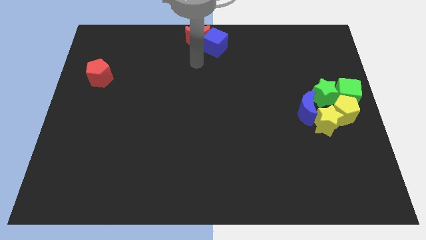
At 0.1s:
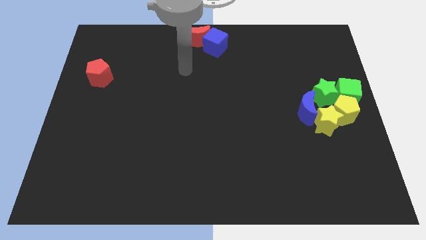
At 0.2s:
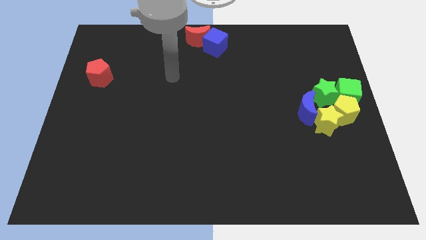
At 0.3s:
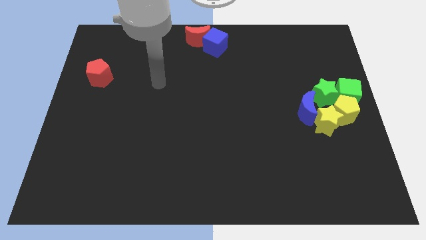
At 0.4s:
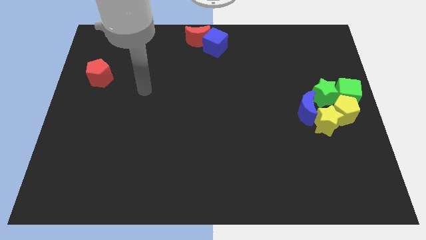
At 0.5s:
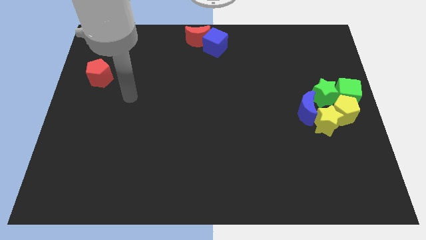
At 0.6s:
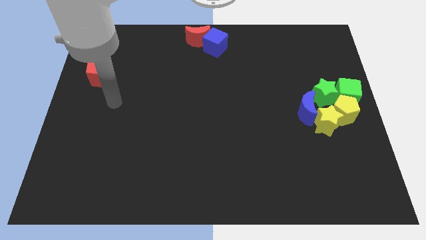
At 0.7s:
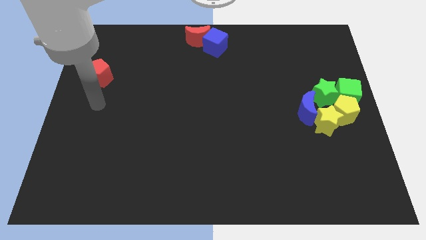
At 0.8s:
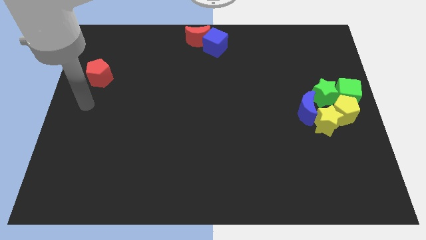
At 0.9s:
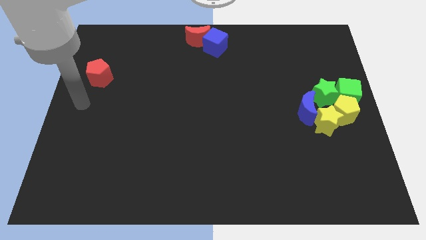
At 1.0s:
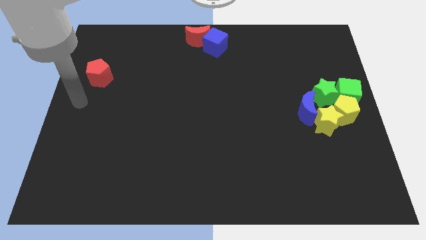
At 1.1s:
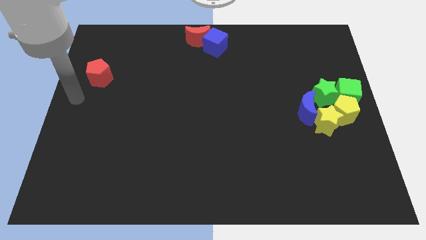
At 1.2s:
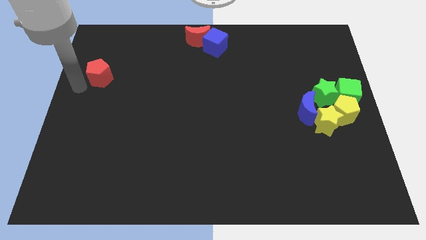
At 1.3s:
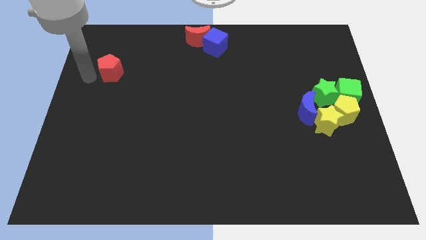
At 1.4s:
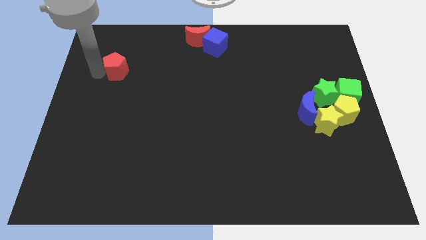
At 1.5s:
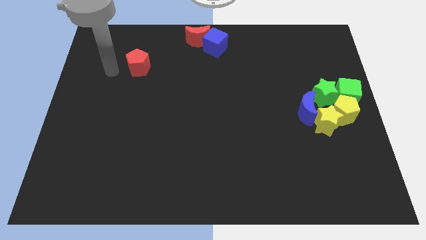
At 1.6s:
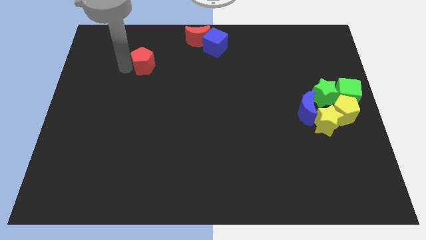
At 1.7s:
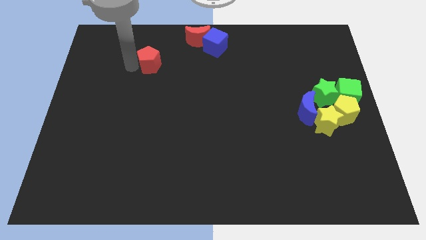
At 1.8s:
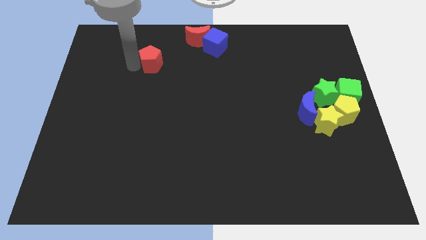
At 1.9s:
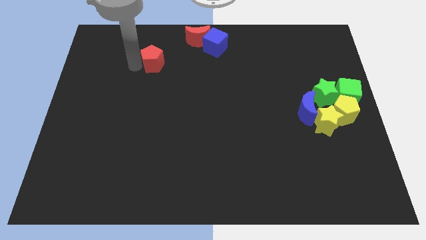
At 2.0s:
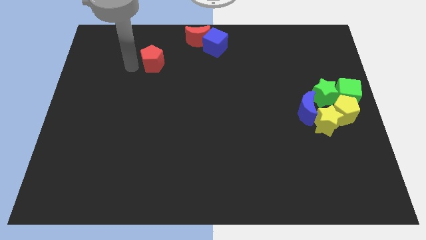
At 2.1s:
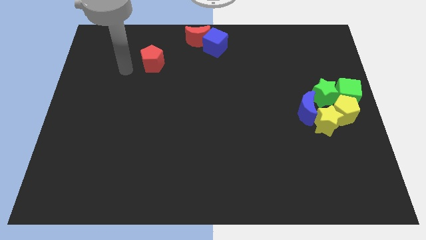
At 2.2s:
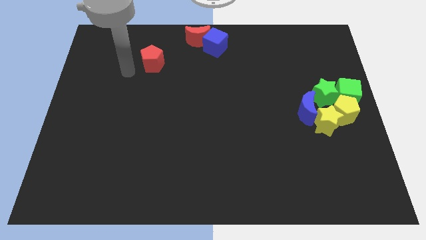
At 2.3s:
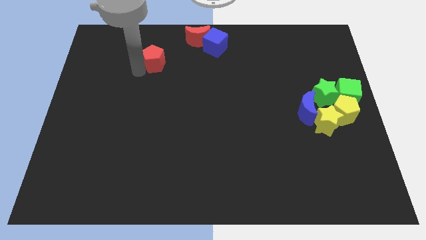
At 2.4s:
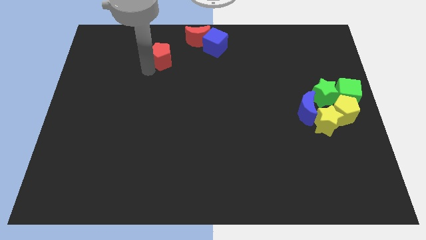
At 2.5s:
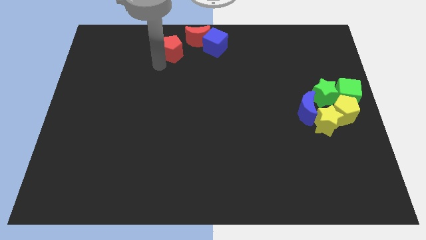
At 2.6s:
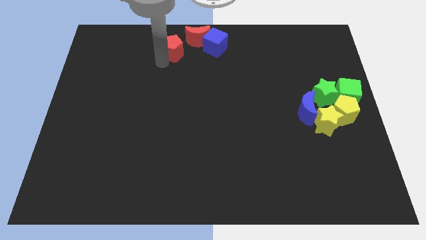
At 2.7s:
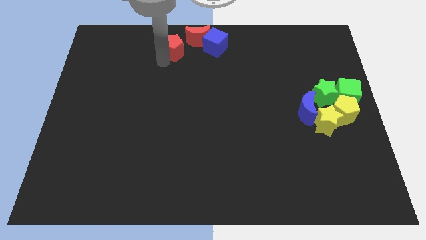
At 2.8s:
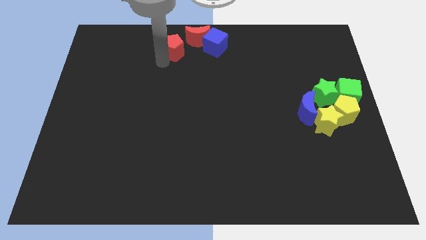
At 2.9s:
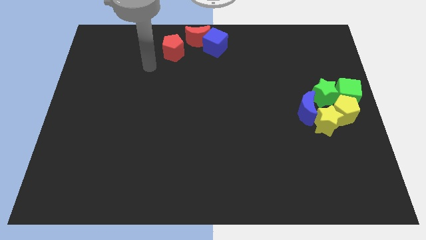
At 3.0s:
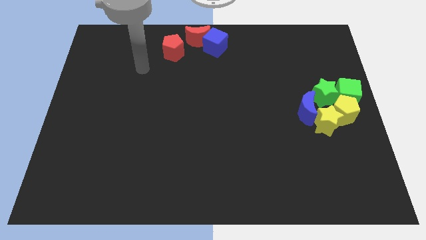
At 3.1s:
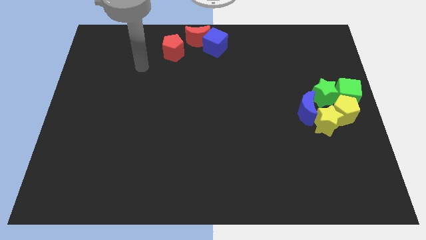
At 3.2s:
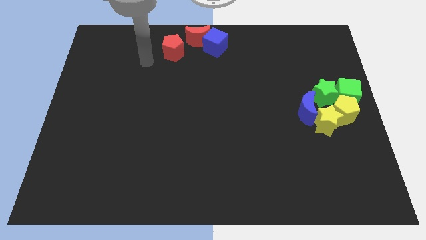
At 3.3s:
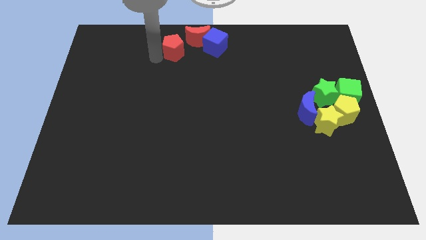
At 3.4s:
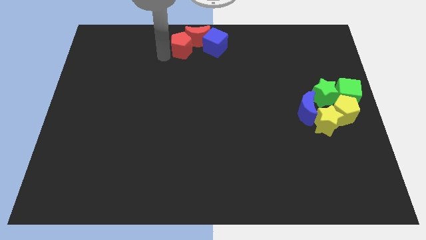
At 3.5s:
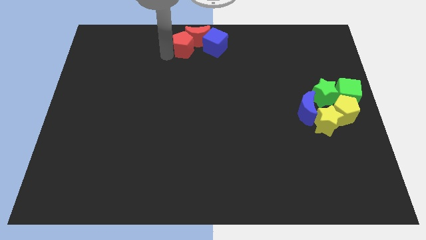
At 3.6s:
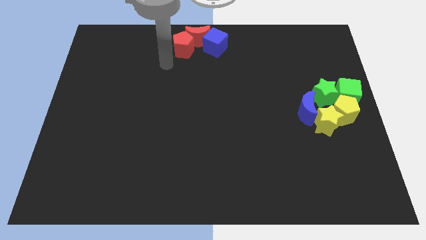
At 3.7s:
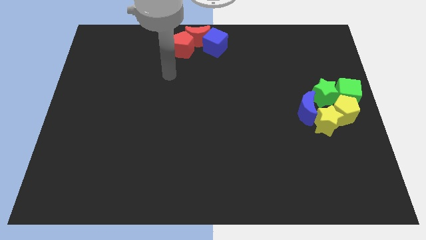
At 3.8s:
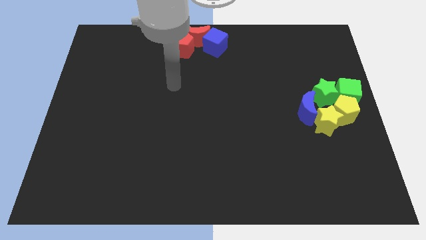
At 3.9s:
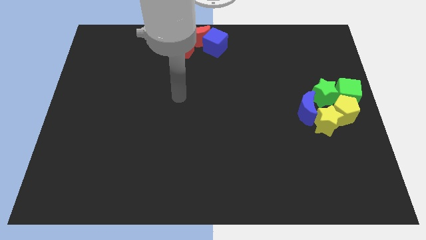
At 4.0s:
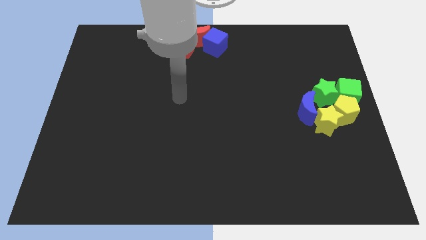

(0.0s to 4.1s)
move the red pentagon to the bottom of the red crescent

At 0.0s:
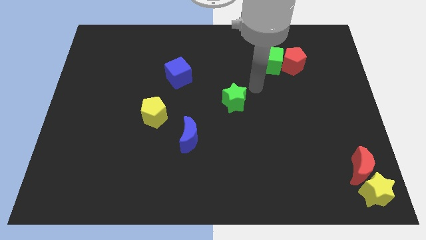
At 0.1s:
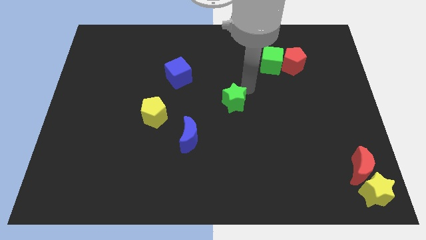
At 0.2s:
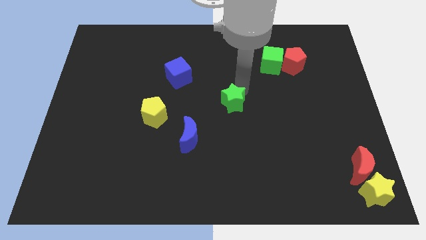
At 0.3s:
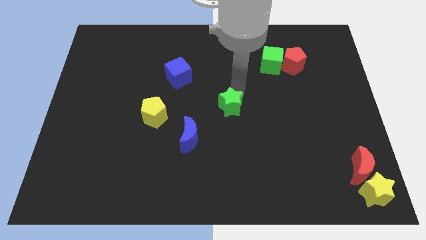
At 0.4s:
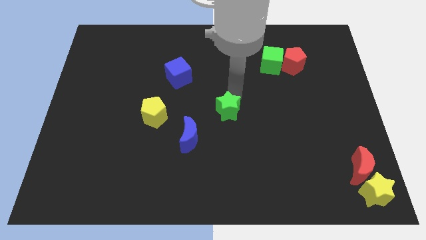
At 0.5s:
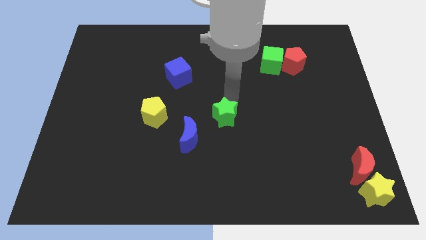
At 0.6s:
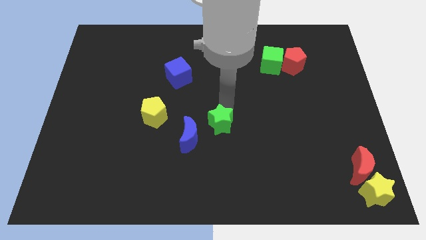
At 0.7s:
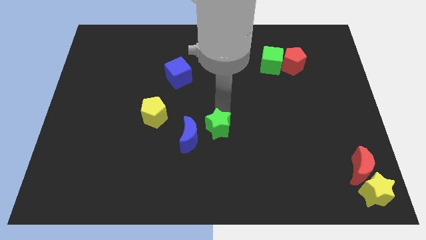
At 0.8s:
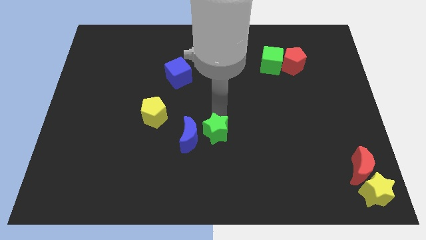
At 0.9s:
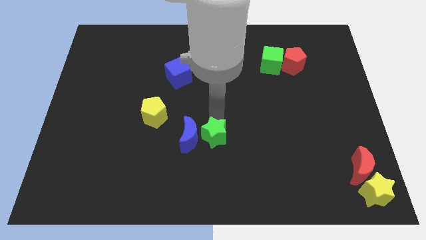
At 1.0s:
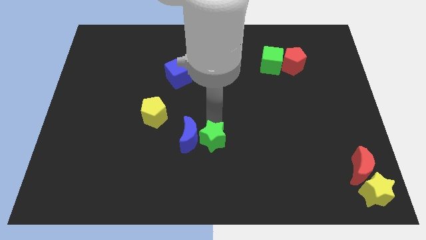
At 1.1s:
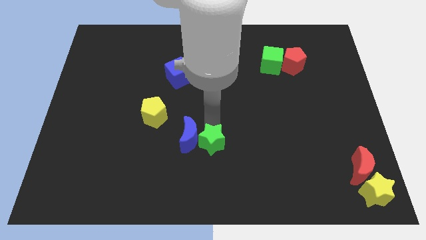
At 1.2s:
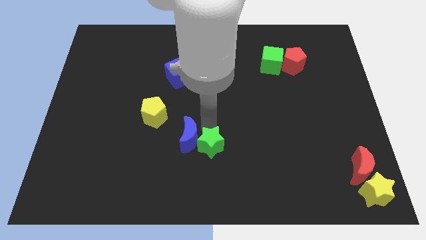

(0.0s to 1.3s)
move the green star to the right of the blue moon

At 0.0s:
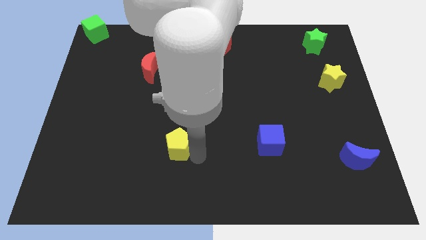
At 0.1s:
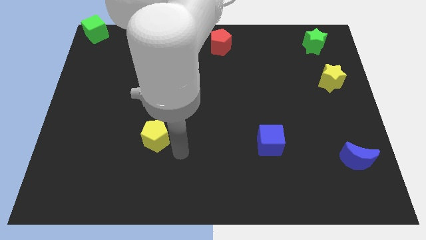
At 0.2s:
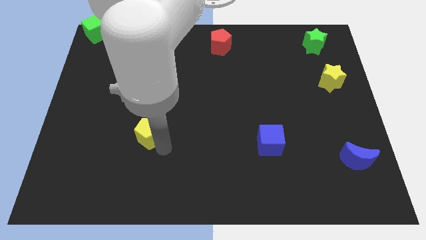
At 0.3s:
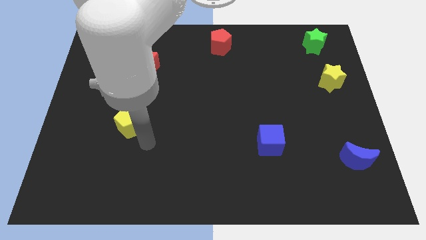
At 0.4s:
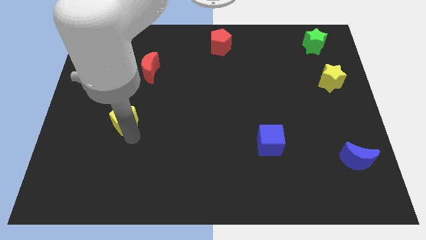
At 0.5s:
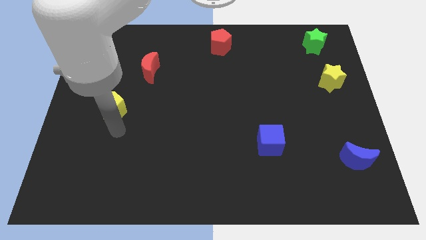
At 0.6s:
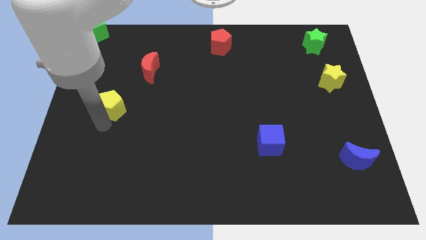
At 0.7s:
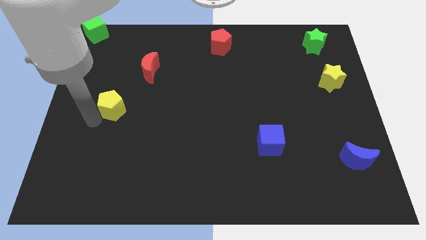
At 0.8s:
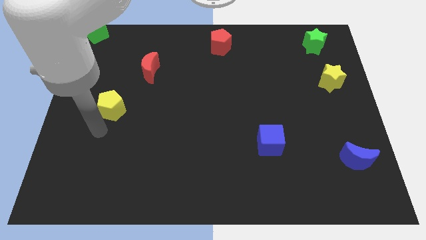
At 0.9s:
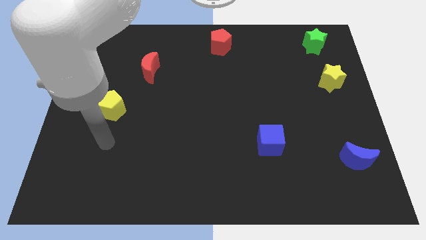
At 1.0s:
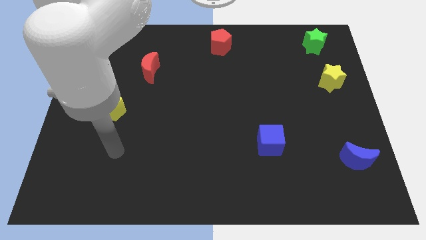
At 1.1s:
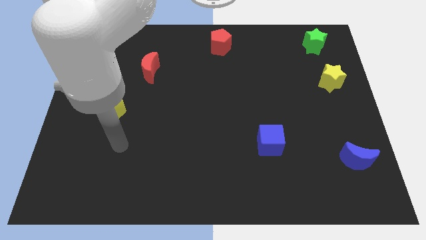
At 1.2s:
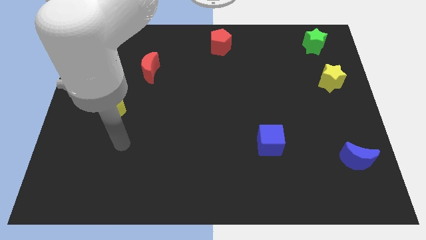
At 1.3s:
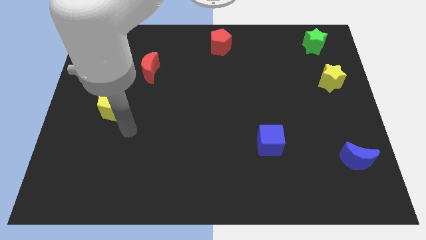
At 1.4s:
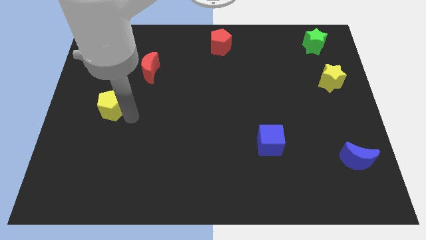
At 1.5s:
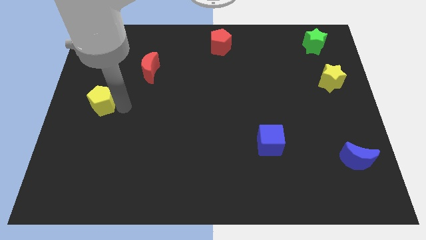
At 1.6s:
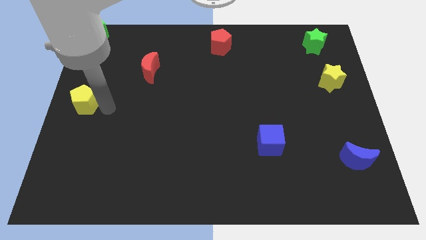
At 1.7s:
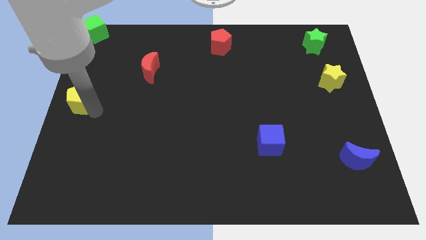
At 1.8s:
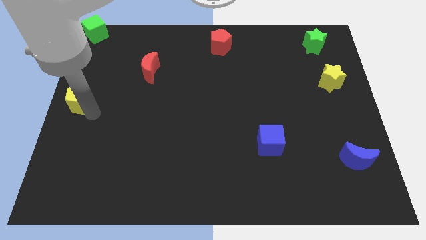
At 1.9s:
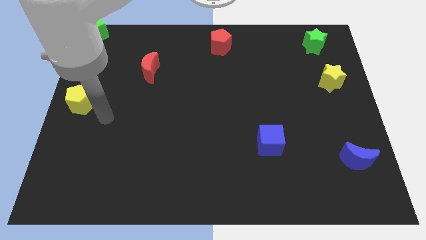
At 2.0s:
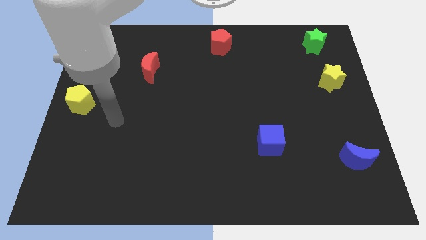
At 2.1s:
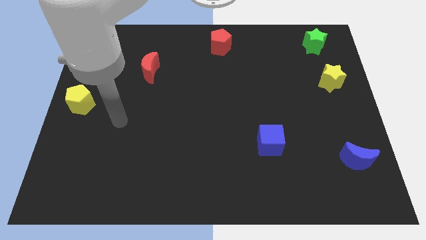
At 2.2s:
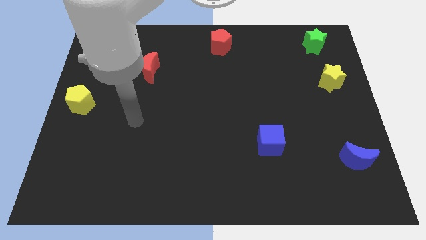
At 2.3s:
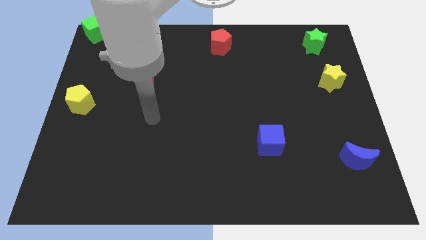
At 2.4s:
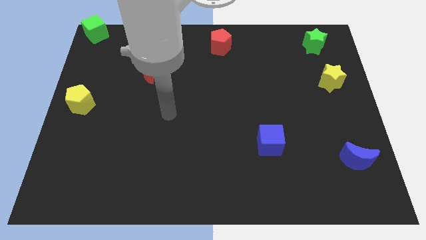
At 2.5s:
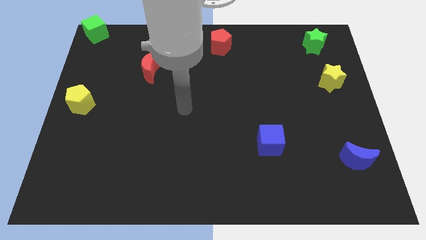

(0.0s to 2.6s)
move the yellow pentagon towards the left center of the board

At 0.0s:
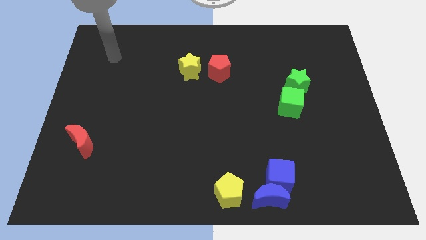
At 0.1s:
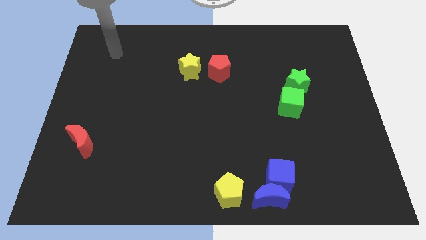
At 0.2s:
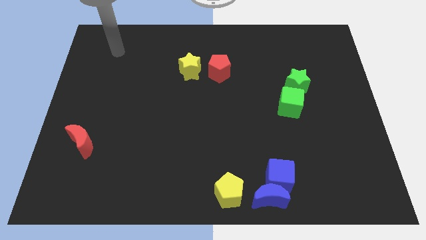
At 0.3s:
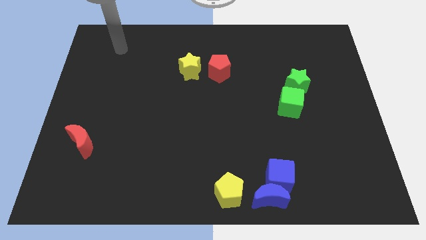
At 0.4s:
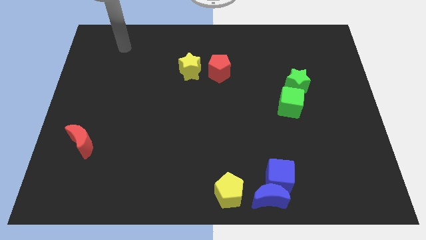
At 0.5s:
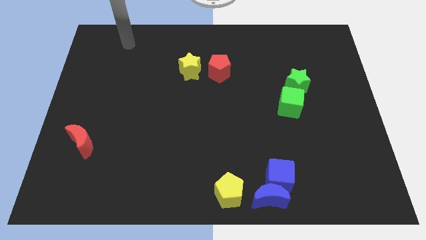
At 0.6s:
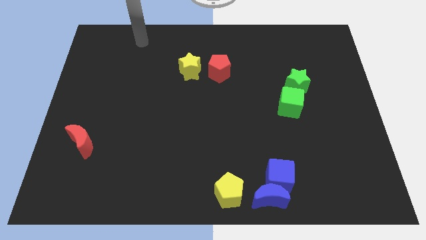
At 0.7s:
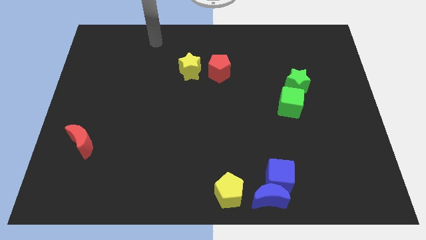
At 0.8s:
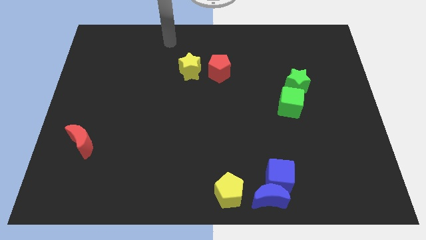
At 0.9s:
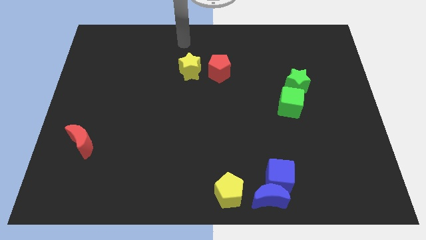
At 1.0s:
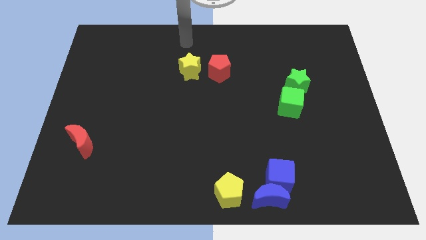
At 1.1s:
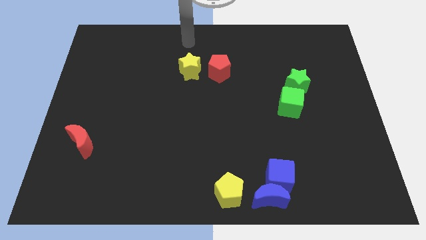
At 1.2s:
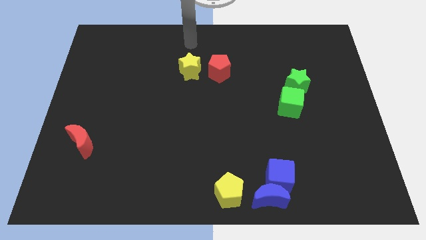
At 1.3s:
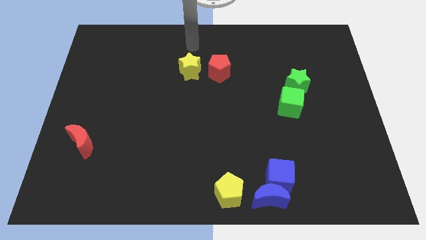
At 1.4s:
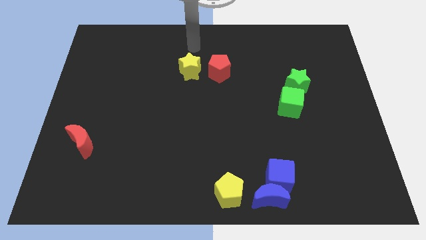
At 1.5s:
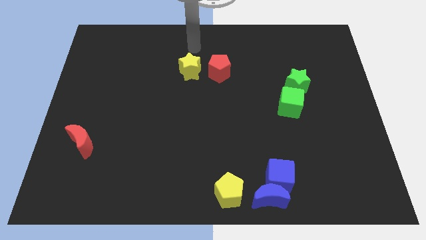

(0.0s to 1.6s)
point your arm at the top side of the yellow star
